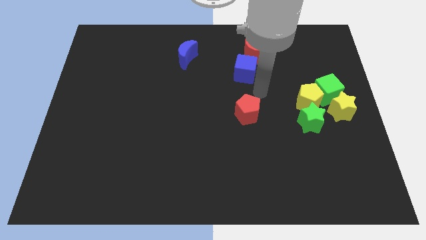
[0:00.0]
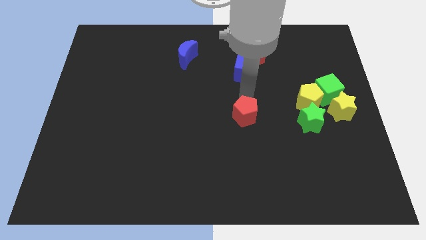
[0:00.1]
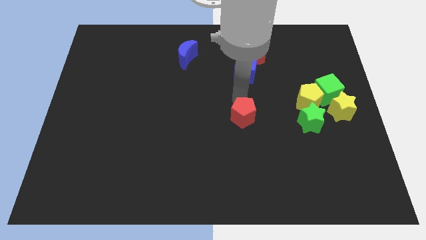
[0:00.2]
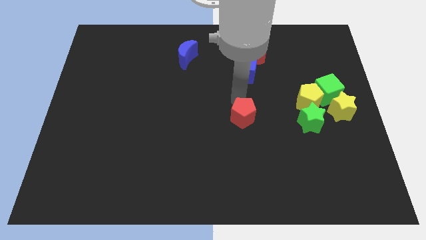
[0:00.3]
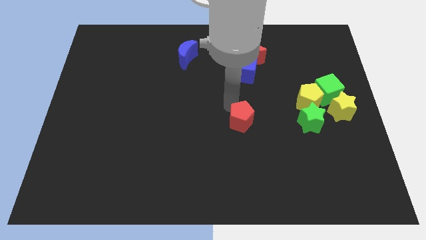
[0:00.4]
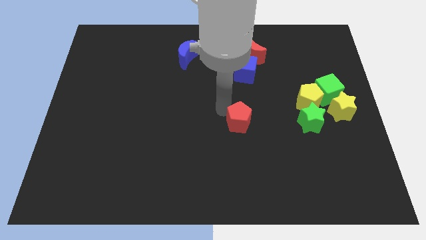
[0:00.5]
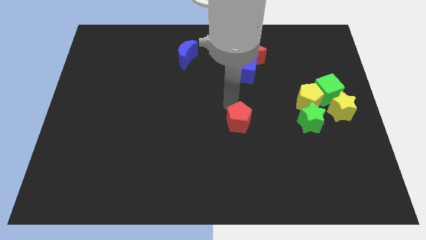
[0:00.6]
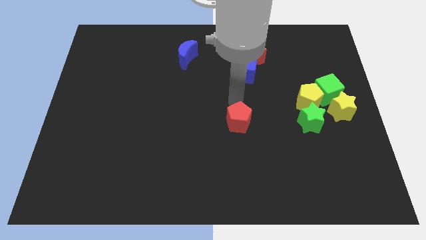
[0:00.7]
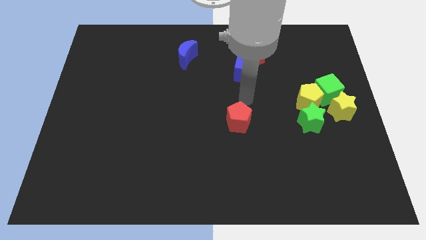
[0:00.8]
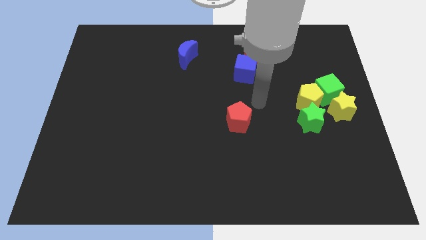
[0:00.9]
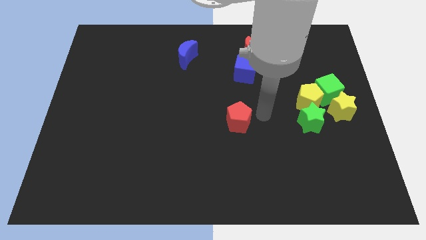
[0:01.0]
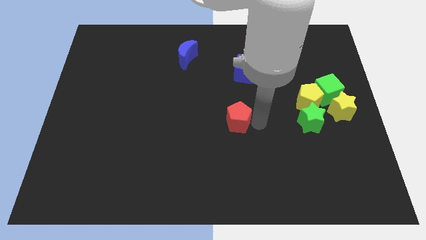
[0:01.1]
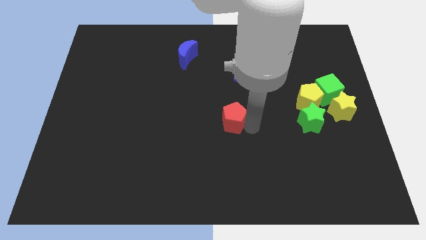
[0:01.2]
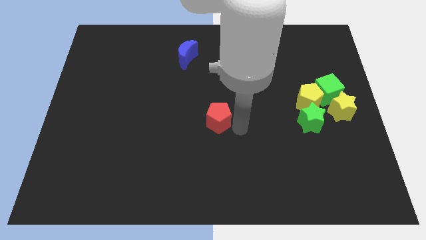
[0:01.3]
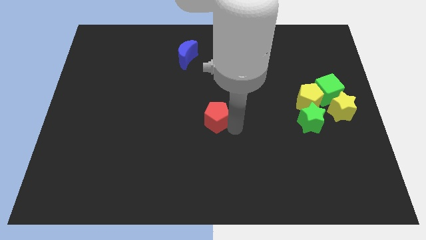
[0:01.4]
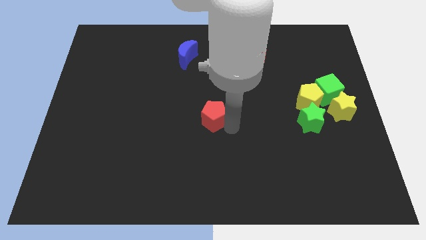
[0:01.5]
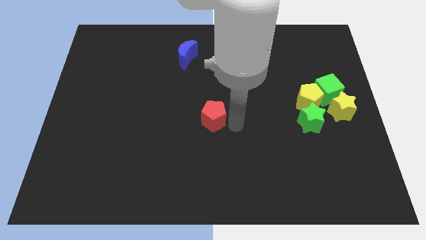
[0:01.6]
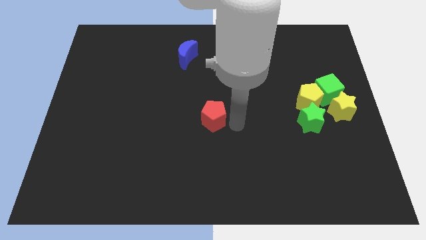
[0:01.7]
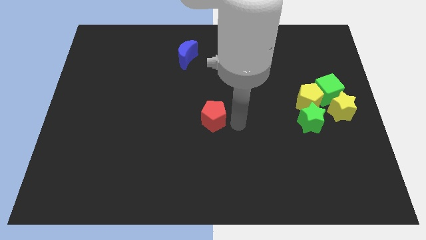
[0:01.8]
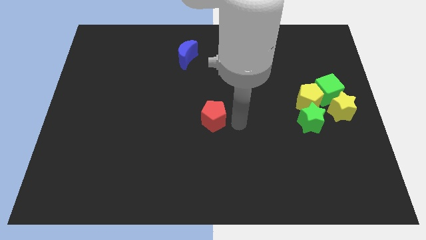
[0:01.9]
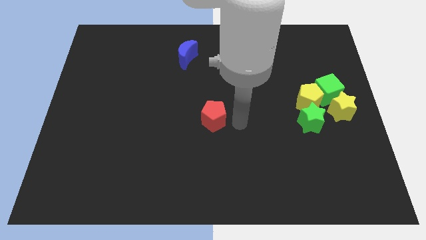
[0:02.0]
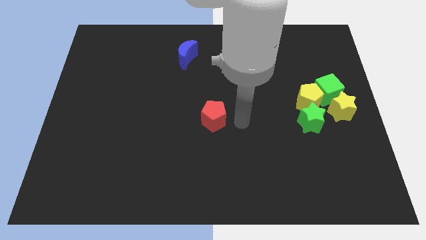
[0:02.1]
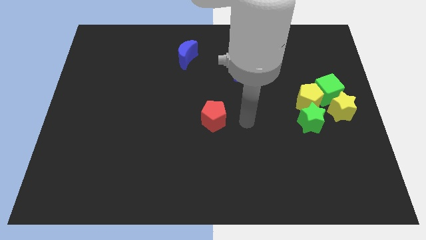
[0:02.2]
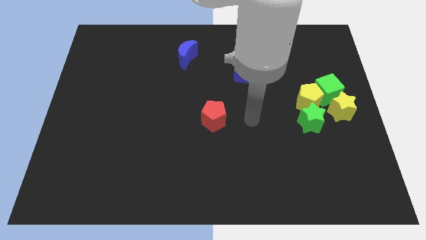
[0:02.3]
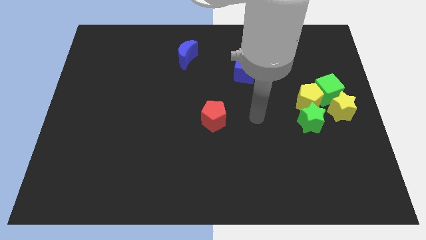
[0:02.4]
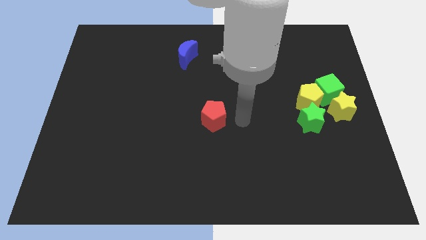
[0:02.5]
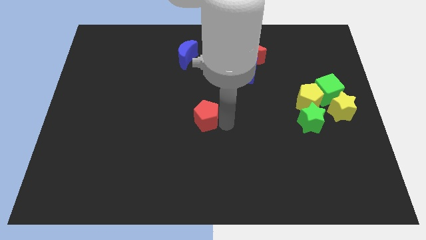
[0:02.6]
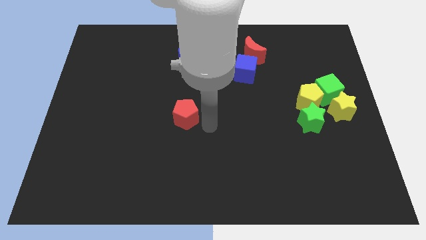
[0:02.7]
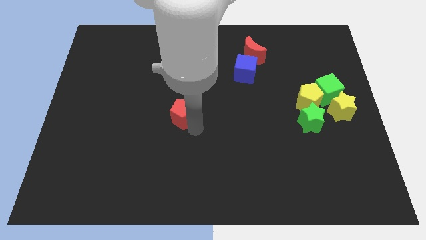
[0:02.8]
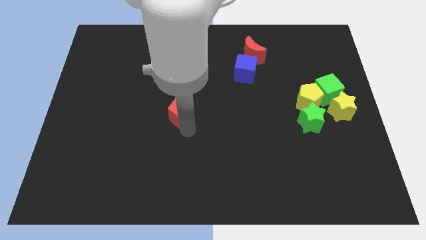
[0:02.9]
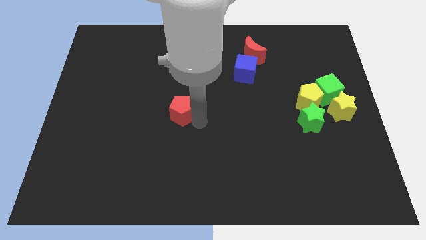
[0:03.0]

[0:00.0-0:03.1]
push the red pentagon towards the left side of the board

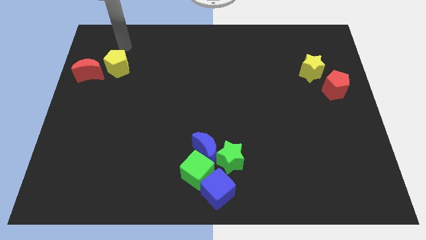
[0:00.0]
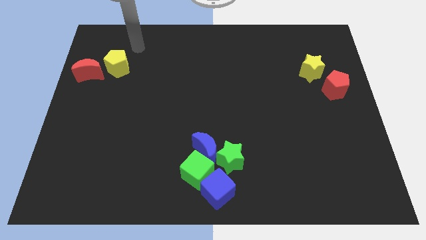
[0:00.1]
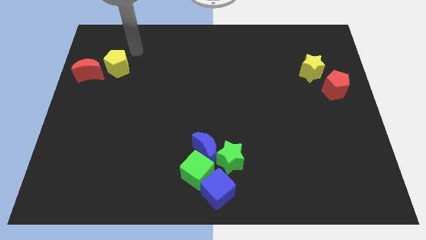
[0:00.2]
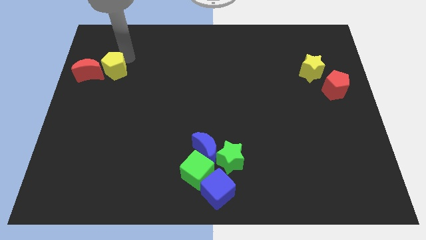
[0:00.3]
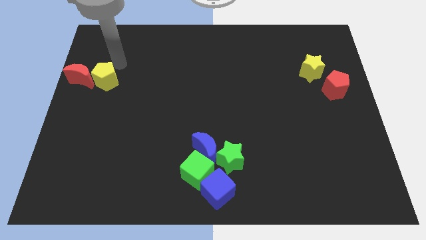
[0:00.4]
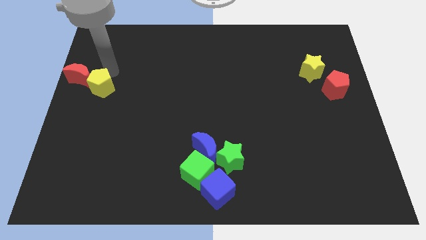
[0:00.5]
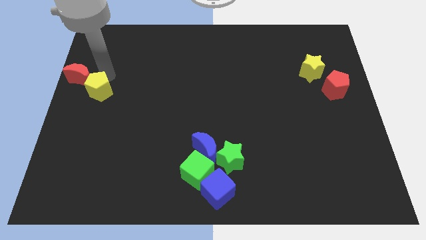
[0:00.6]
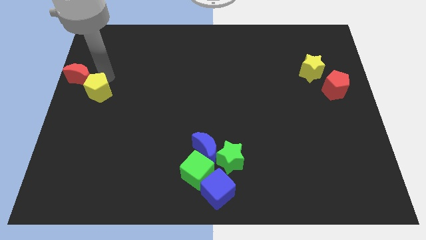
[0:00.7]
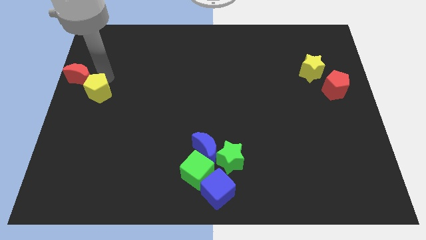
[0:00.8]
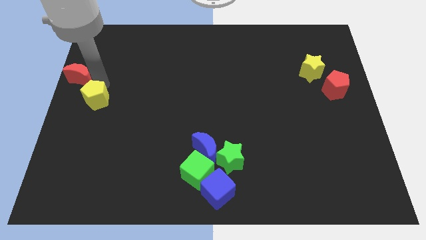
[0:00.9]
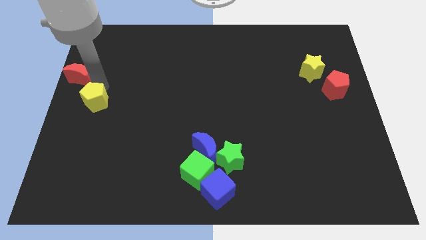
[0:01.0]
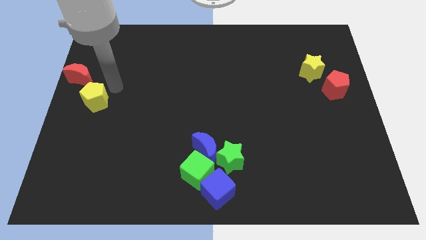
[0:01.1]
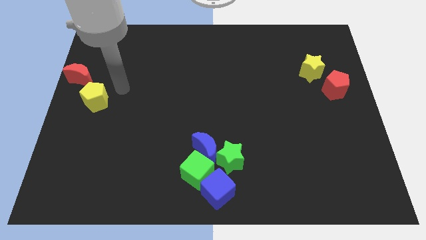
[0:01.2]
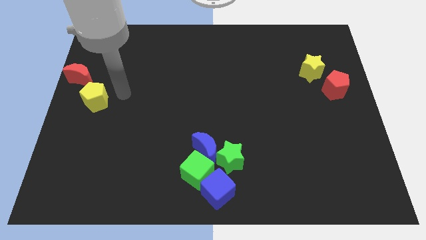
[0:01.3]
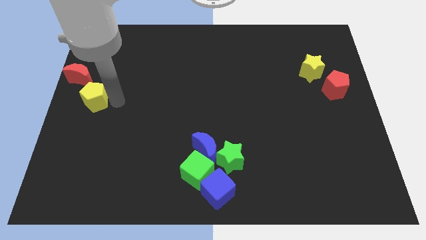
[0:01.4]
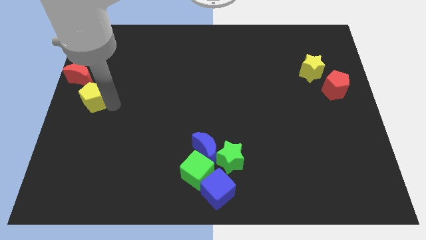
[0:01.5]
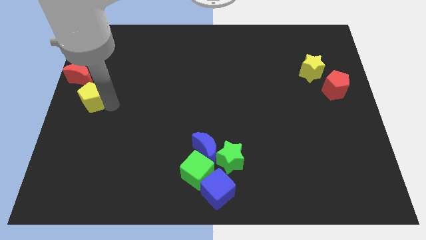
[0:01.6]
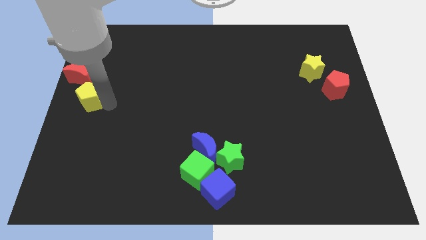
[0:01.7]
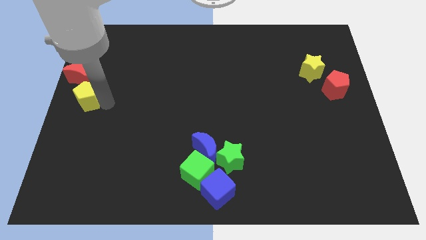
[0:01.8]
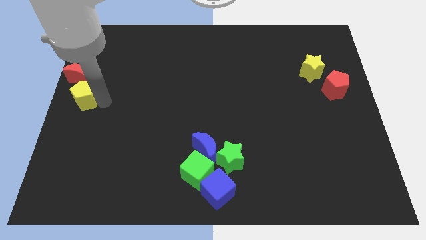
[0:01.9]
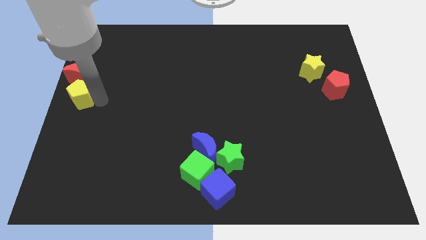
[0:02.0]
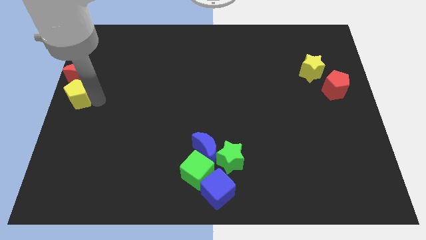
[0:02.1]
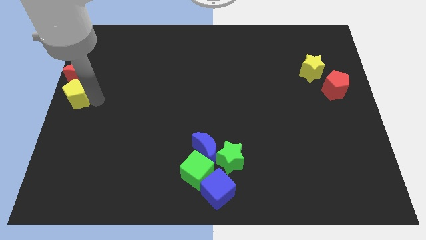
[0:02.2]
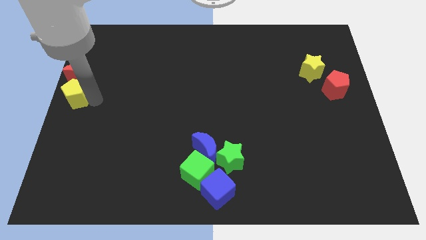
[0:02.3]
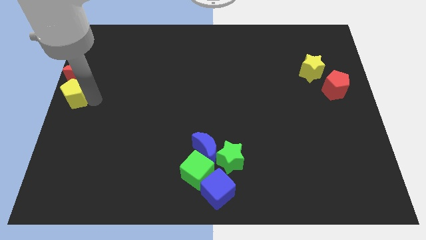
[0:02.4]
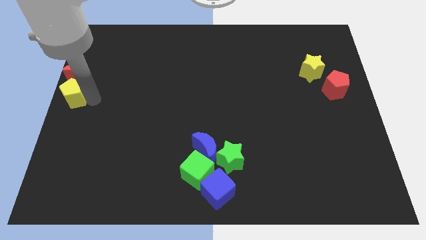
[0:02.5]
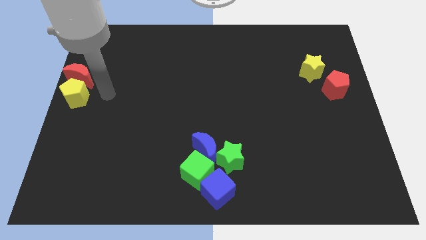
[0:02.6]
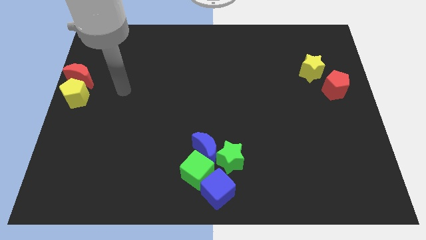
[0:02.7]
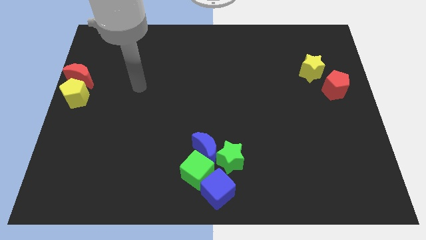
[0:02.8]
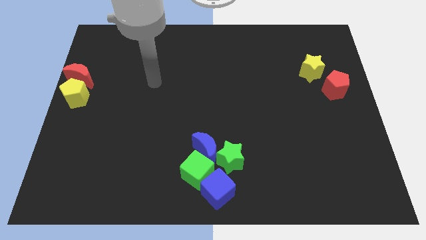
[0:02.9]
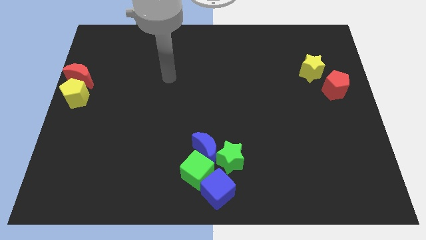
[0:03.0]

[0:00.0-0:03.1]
move yellow pentagon below to the red crescent

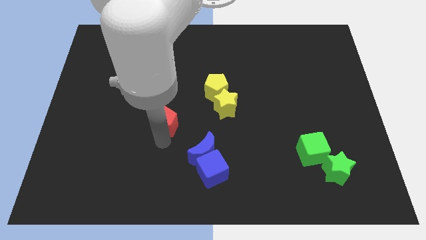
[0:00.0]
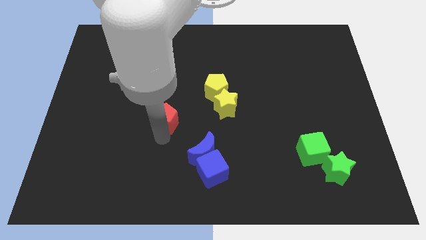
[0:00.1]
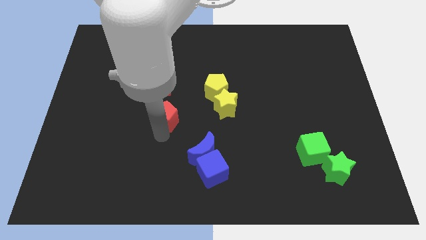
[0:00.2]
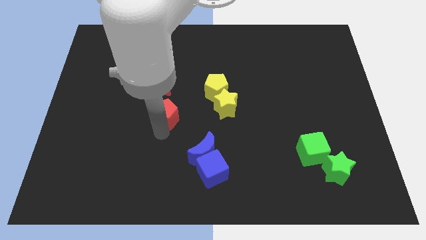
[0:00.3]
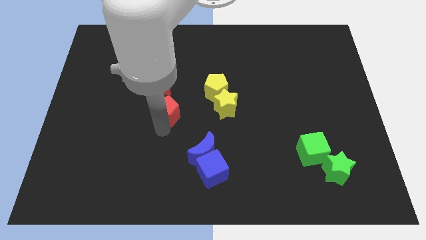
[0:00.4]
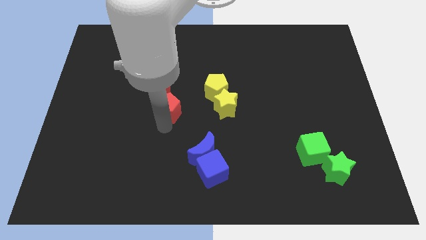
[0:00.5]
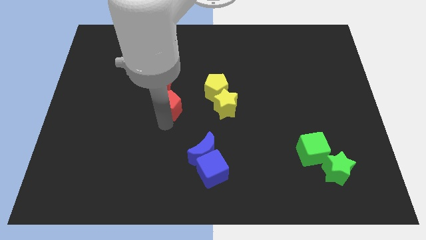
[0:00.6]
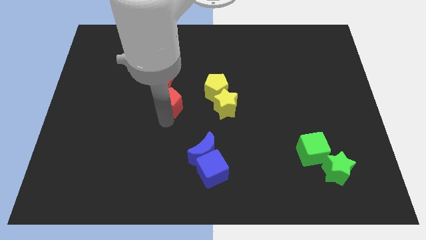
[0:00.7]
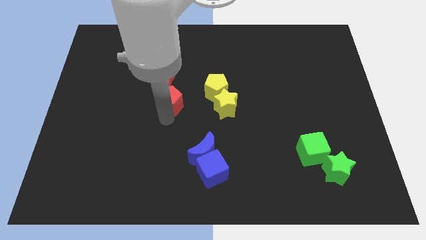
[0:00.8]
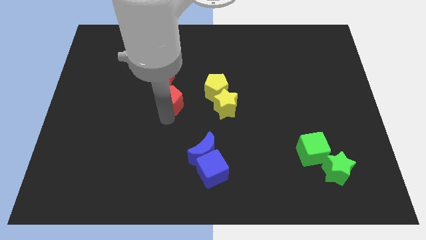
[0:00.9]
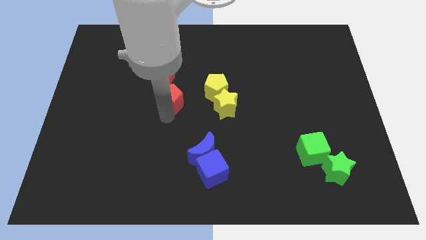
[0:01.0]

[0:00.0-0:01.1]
push the red pentagon towards the red moon

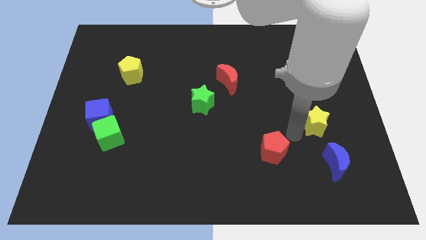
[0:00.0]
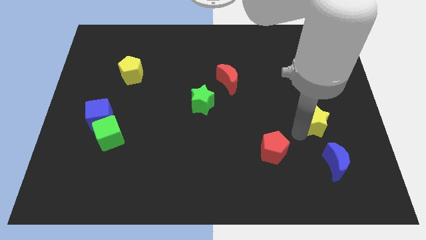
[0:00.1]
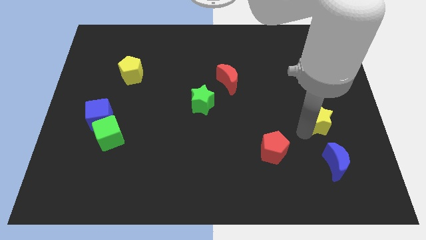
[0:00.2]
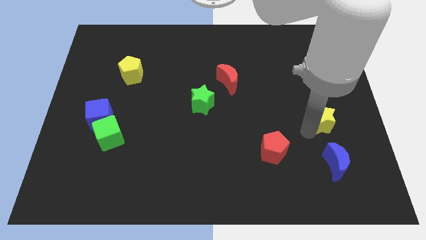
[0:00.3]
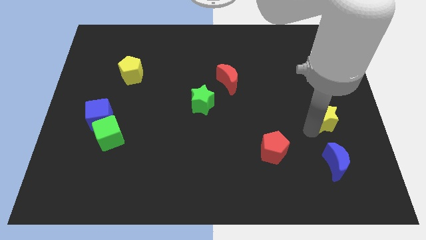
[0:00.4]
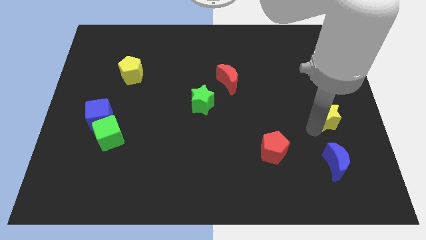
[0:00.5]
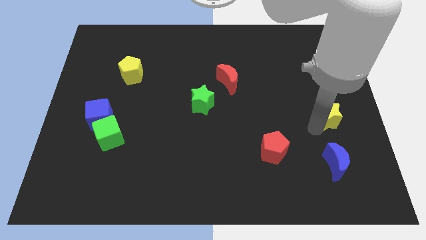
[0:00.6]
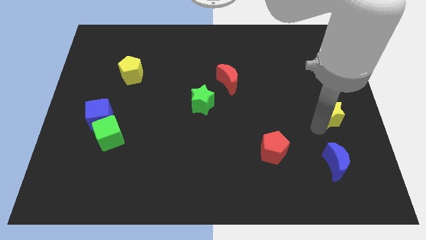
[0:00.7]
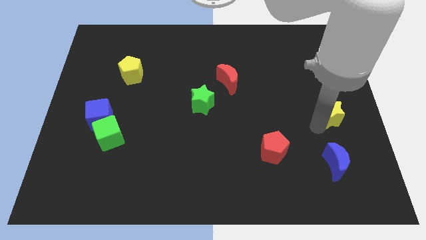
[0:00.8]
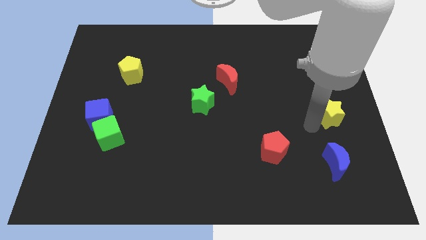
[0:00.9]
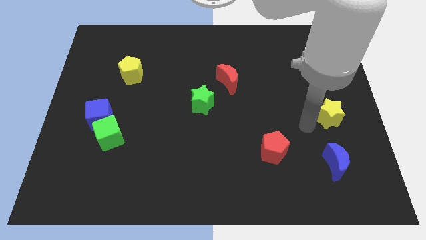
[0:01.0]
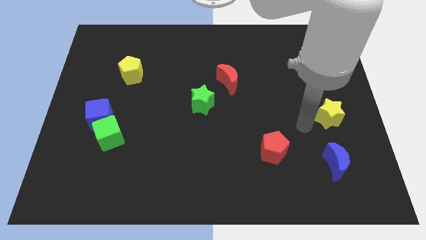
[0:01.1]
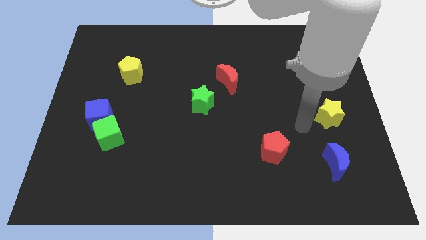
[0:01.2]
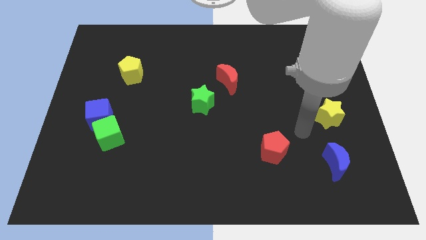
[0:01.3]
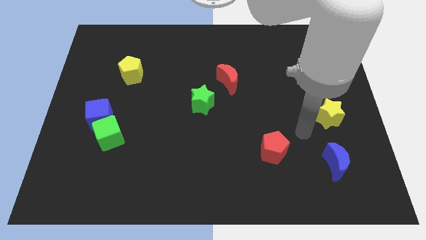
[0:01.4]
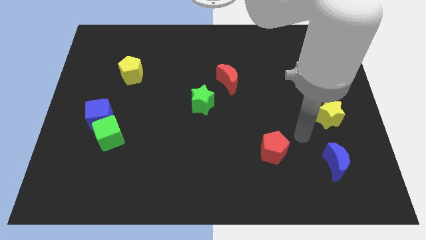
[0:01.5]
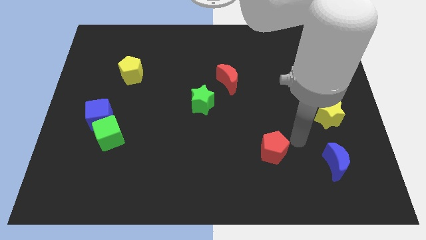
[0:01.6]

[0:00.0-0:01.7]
slide the yellow star slightly to the right
